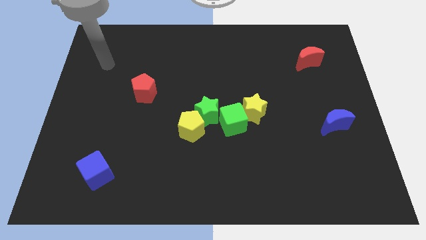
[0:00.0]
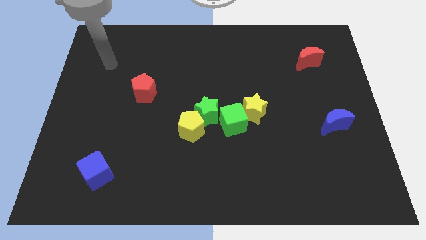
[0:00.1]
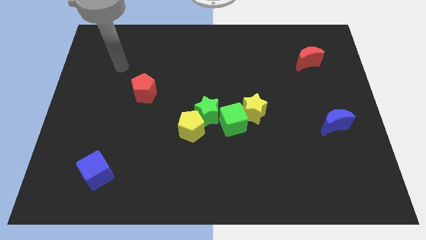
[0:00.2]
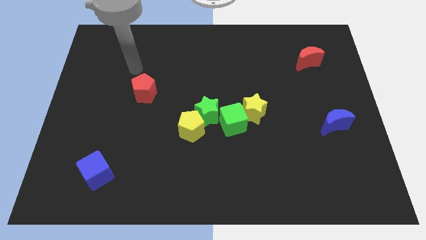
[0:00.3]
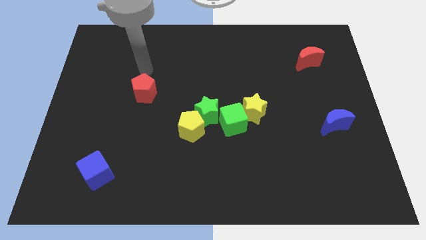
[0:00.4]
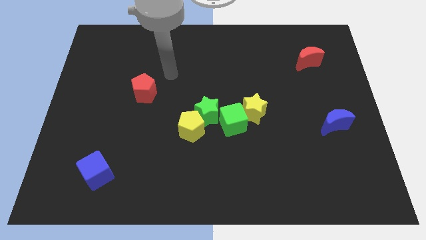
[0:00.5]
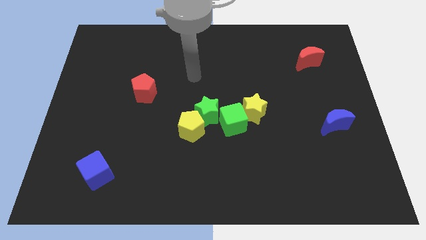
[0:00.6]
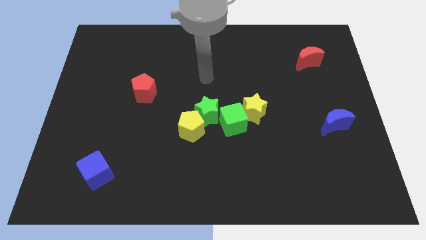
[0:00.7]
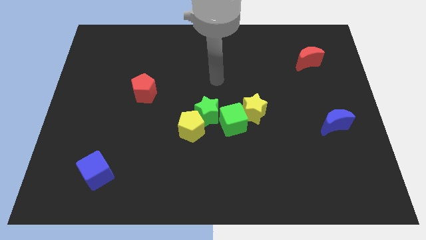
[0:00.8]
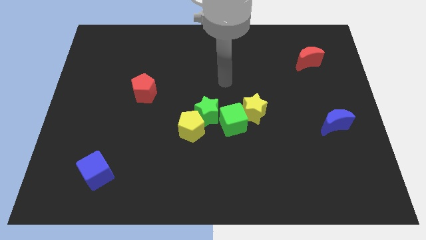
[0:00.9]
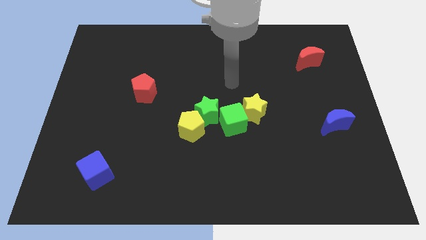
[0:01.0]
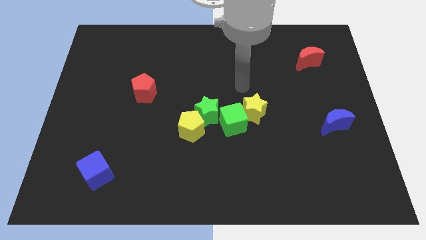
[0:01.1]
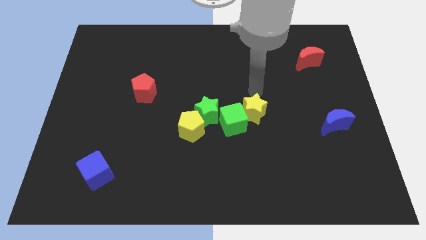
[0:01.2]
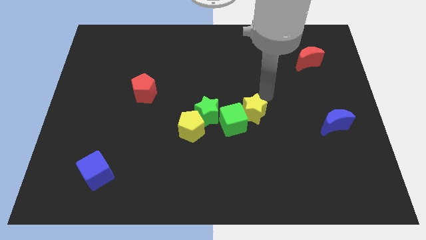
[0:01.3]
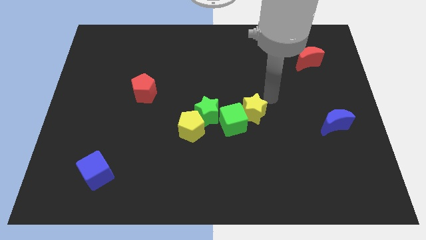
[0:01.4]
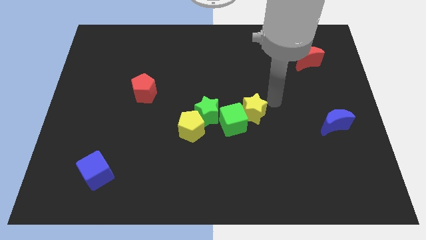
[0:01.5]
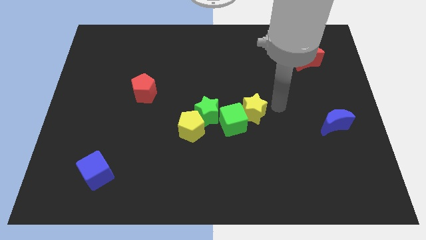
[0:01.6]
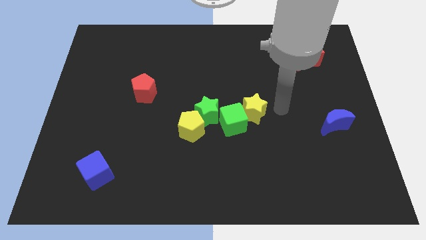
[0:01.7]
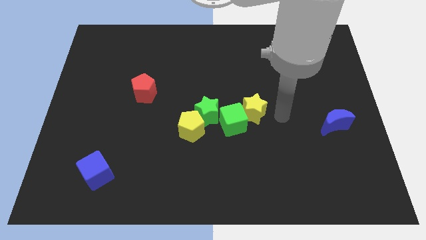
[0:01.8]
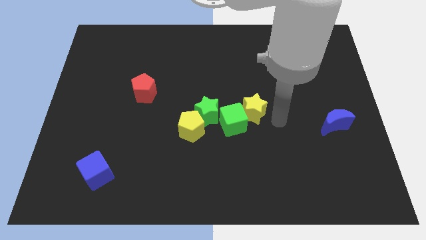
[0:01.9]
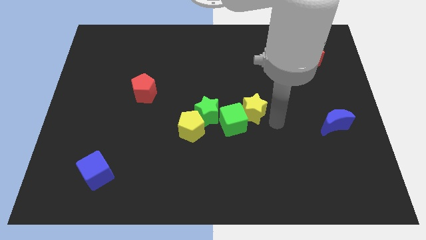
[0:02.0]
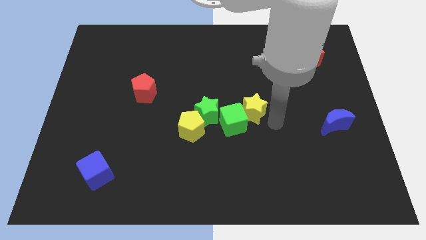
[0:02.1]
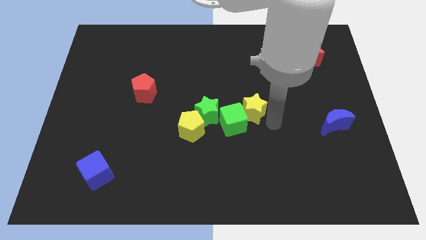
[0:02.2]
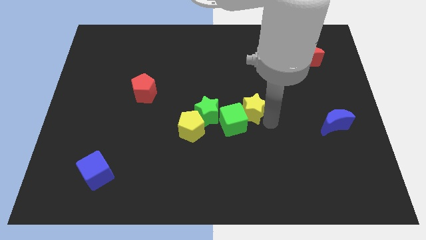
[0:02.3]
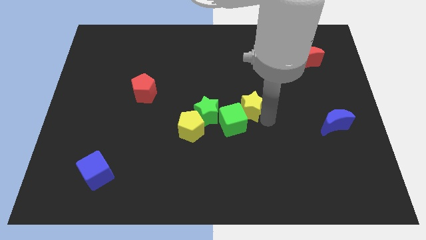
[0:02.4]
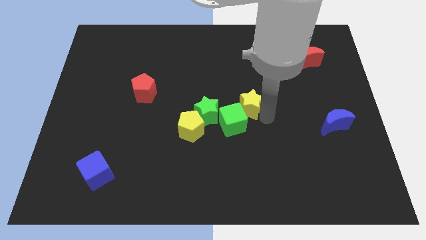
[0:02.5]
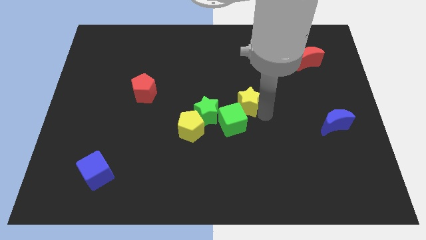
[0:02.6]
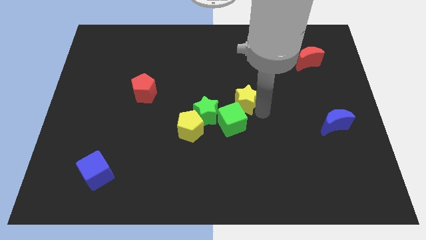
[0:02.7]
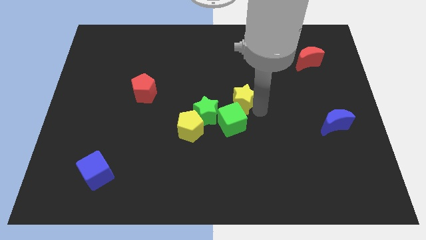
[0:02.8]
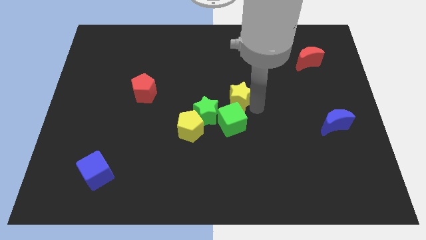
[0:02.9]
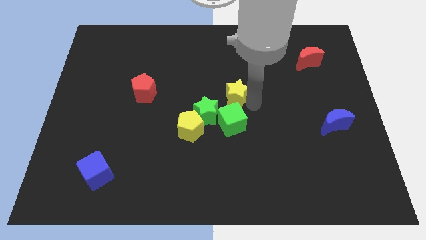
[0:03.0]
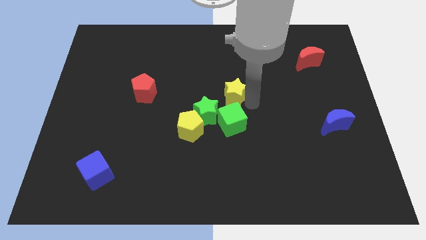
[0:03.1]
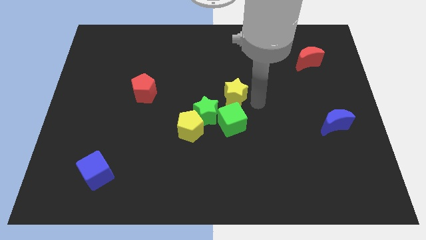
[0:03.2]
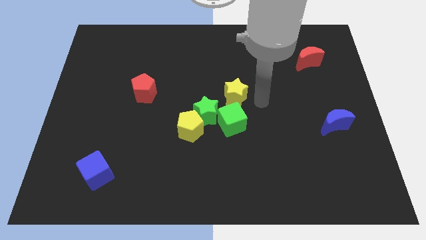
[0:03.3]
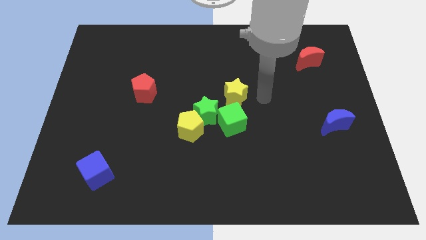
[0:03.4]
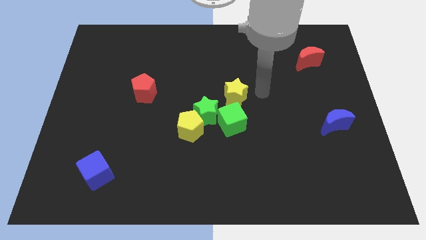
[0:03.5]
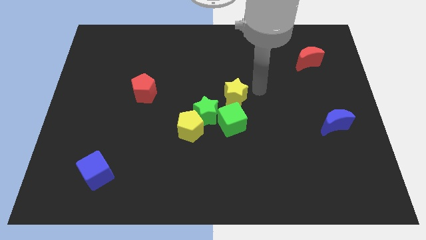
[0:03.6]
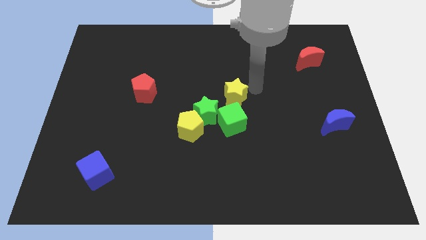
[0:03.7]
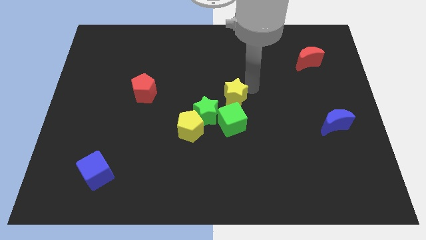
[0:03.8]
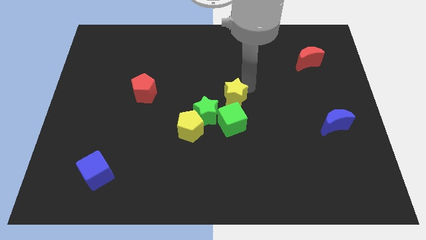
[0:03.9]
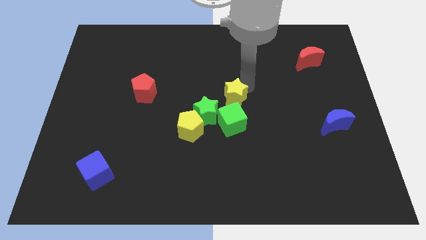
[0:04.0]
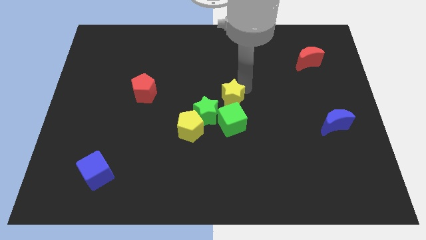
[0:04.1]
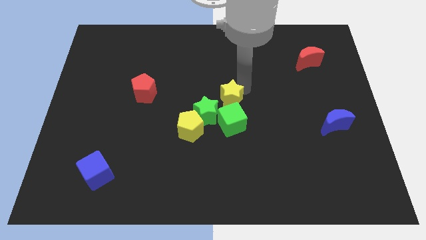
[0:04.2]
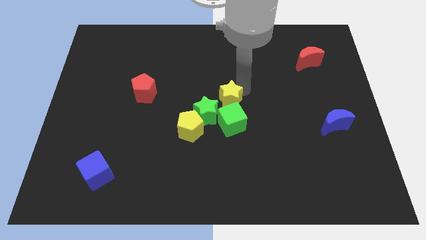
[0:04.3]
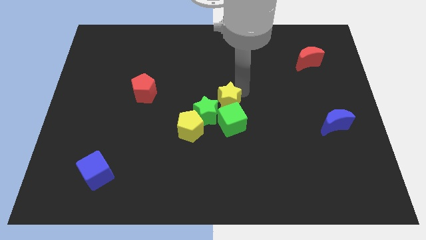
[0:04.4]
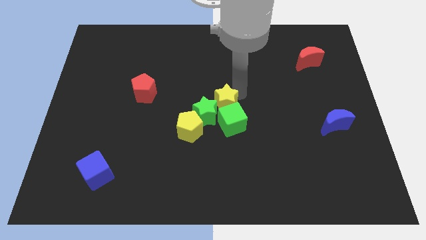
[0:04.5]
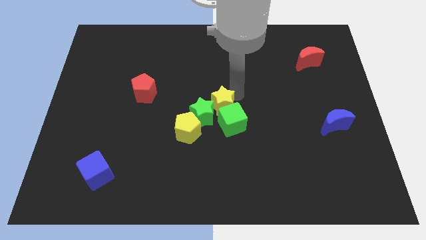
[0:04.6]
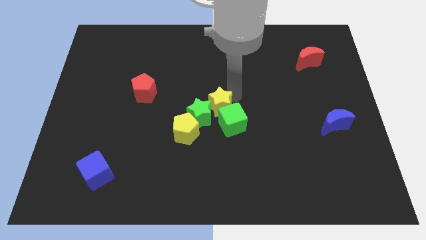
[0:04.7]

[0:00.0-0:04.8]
push the yellow star next to the green star

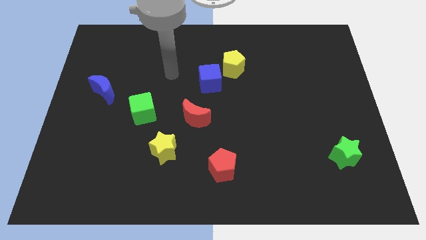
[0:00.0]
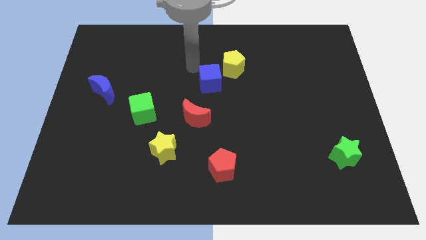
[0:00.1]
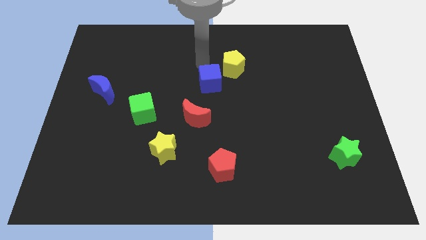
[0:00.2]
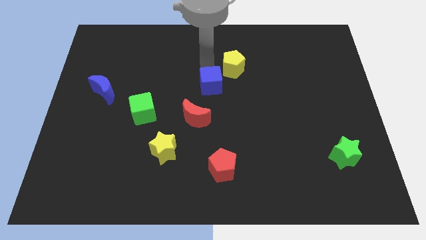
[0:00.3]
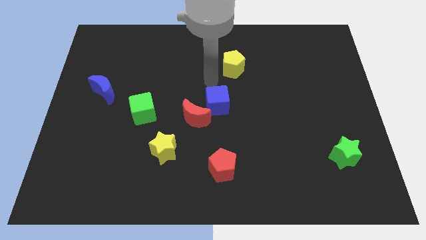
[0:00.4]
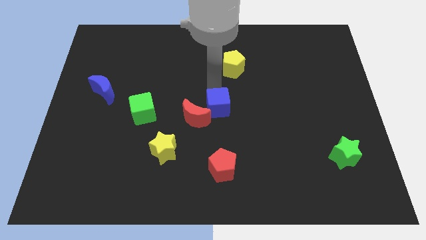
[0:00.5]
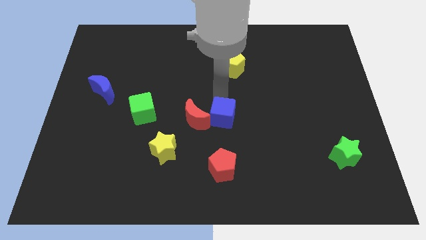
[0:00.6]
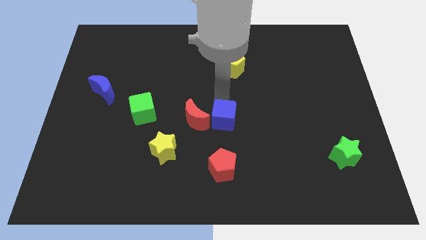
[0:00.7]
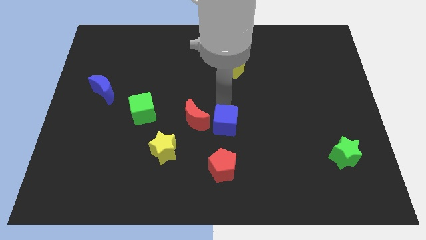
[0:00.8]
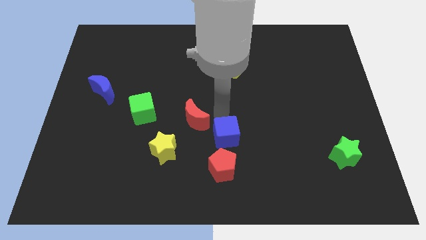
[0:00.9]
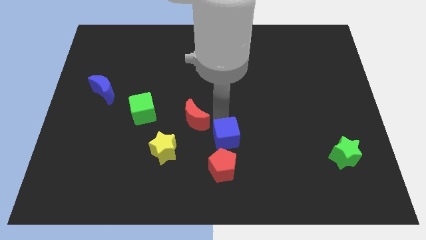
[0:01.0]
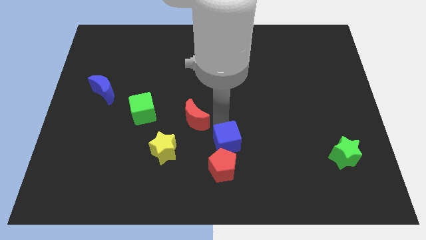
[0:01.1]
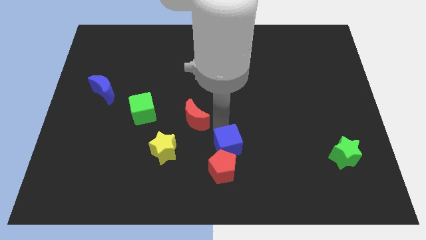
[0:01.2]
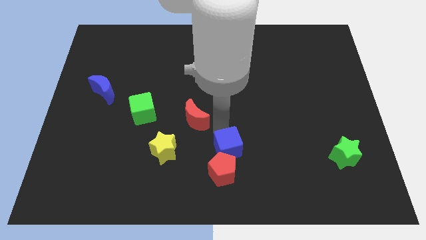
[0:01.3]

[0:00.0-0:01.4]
put the blue cube to the red pentagon

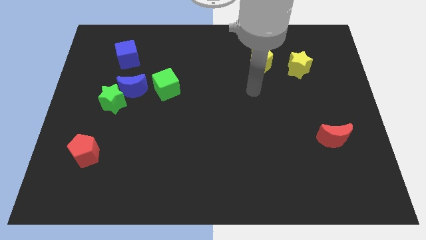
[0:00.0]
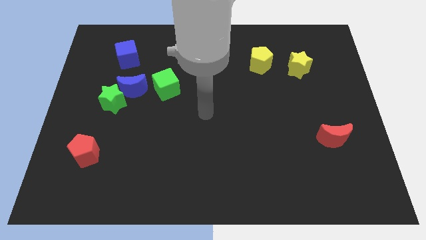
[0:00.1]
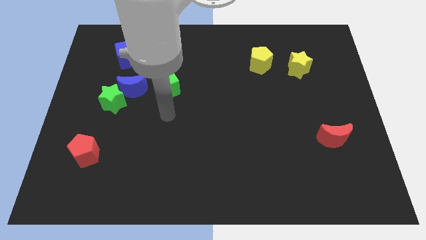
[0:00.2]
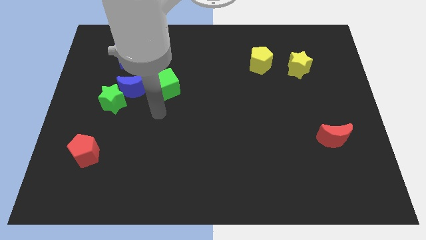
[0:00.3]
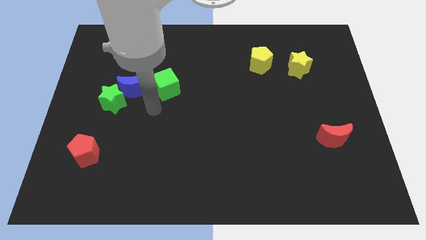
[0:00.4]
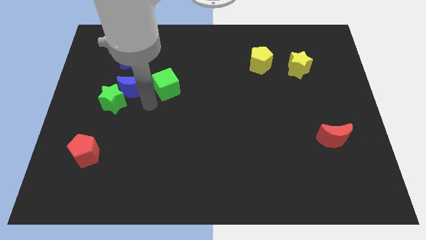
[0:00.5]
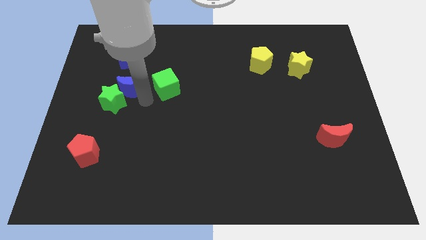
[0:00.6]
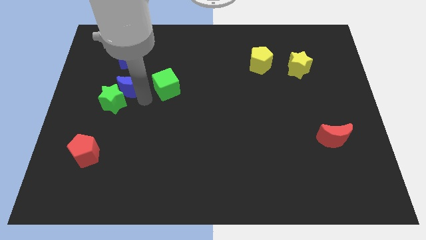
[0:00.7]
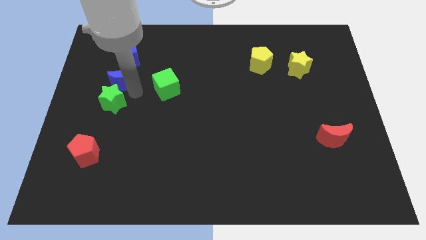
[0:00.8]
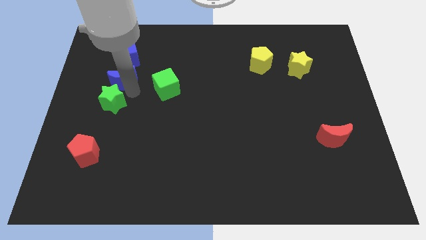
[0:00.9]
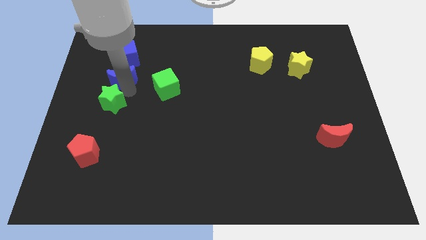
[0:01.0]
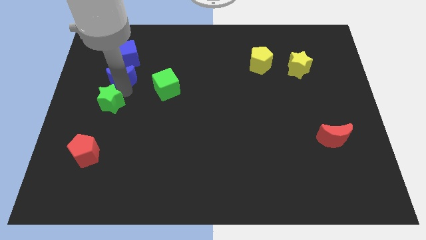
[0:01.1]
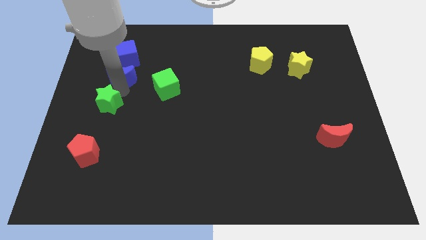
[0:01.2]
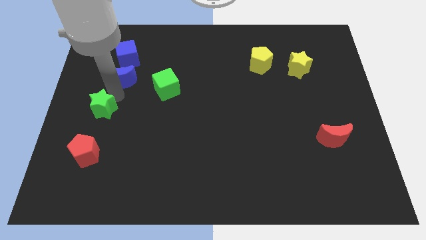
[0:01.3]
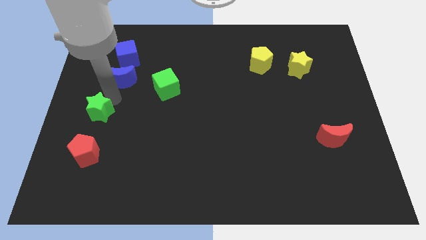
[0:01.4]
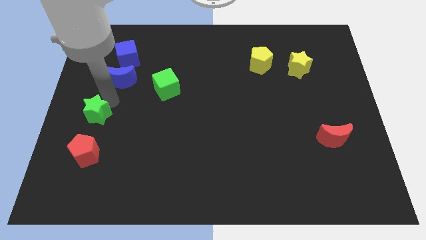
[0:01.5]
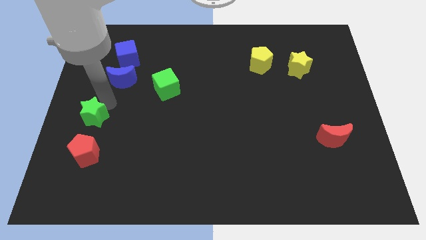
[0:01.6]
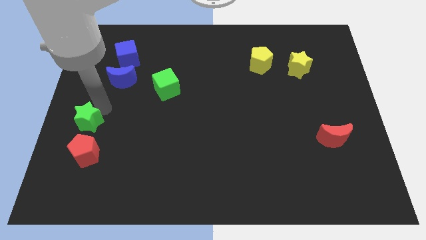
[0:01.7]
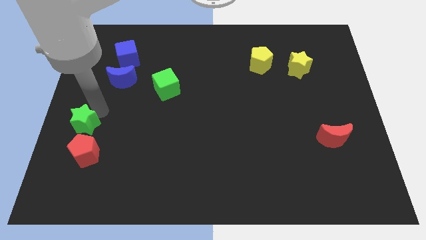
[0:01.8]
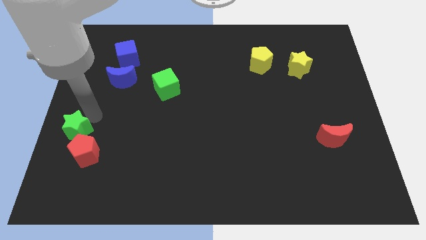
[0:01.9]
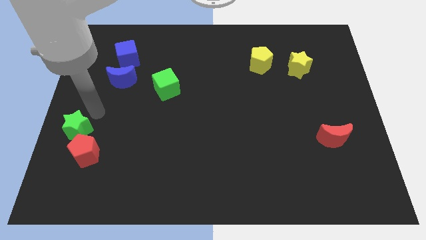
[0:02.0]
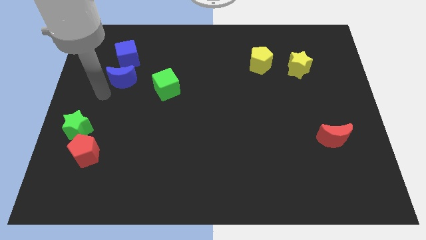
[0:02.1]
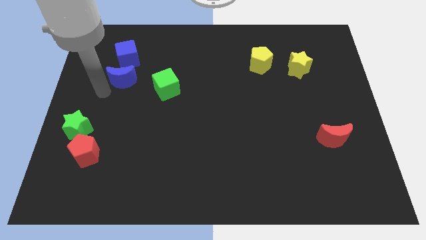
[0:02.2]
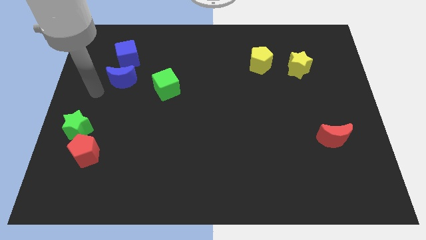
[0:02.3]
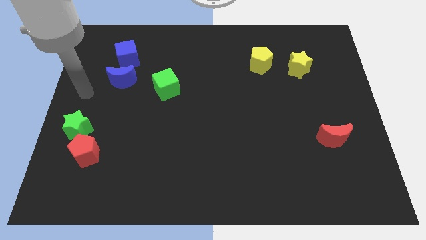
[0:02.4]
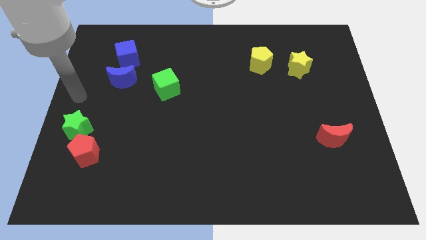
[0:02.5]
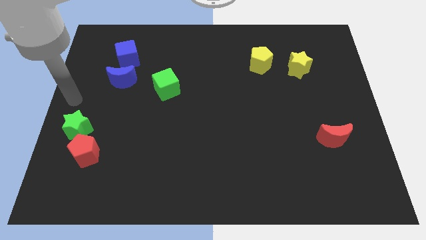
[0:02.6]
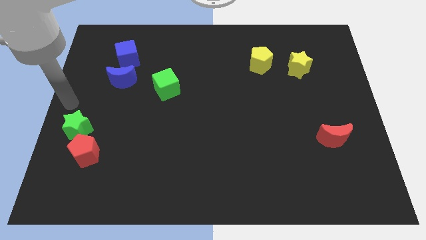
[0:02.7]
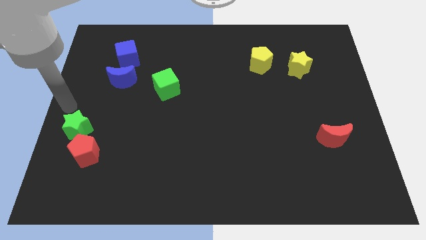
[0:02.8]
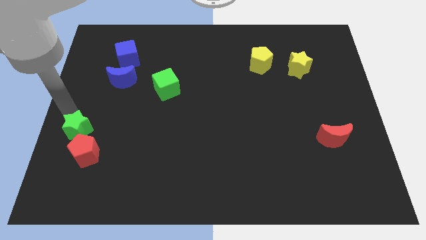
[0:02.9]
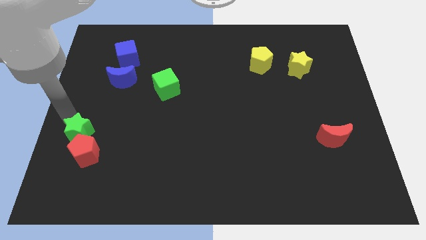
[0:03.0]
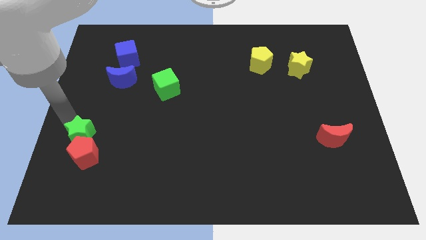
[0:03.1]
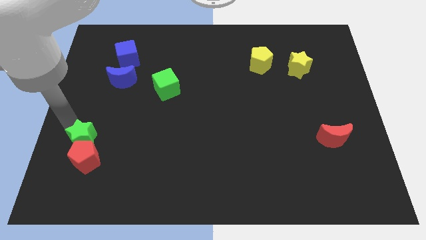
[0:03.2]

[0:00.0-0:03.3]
push the green star to the red pentagon
